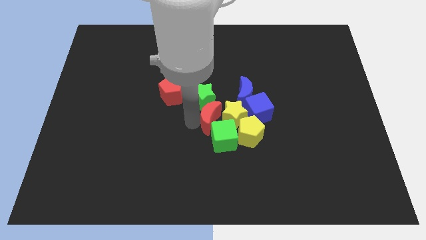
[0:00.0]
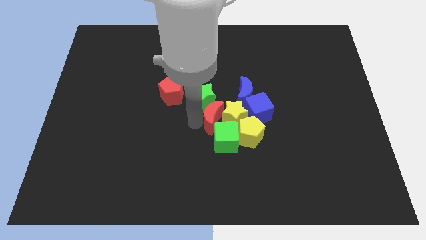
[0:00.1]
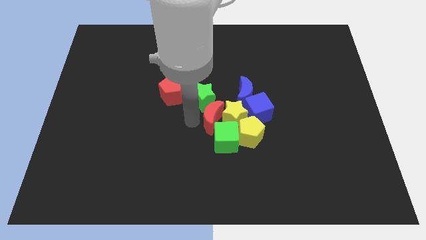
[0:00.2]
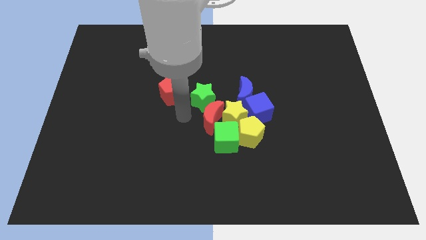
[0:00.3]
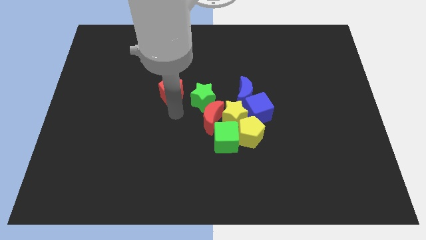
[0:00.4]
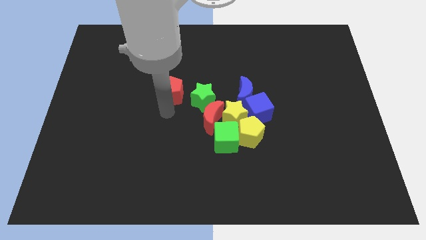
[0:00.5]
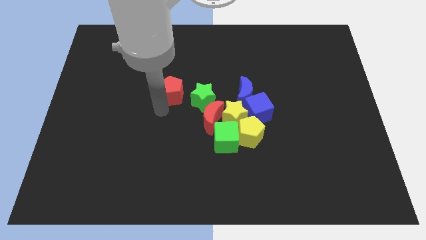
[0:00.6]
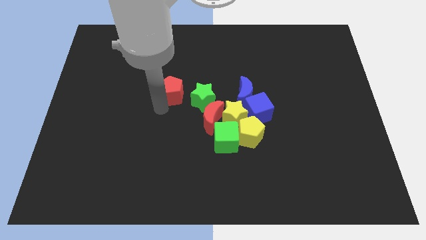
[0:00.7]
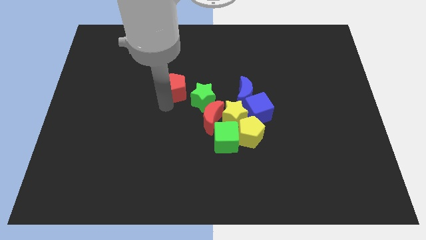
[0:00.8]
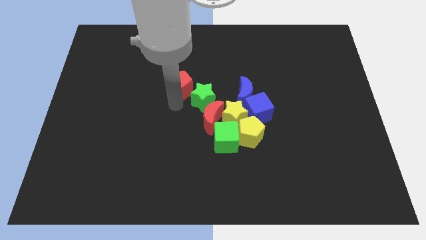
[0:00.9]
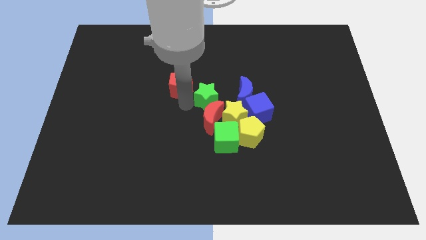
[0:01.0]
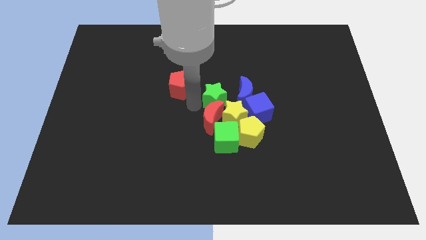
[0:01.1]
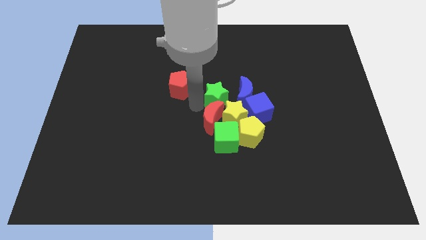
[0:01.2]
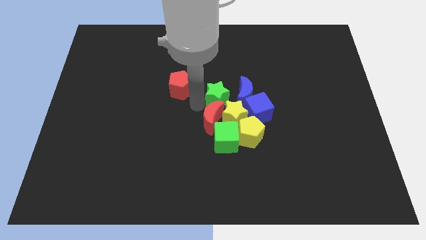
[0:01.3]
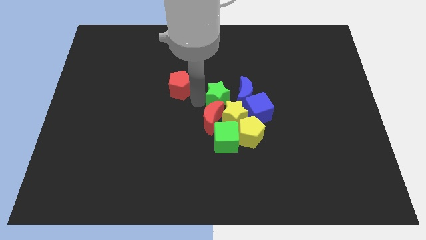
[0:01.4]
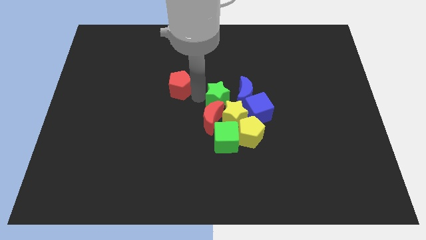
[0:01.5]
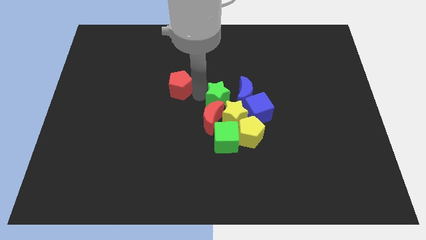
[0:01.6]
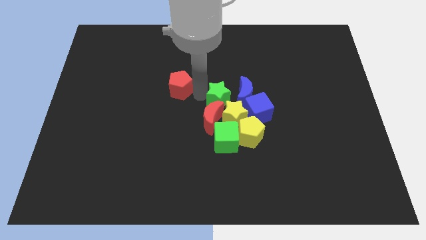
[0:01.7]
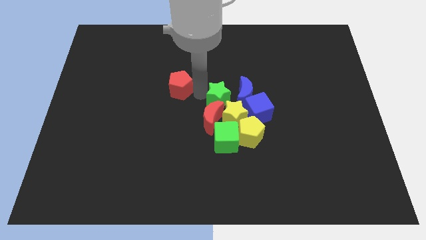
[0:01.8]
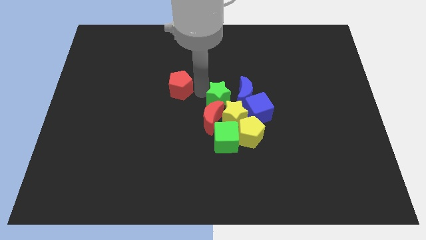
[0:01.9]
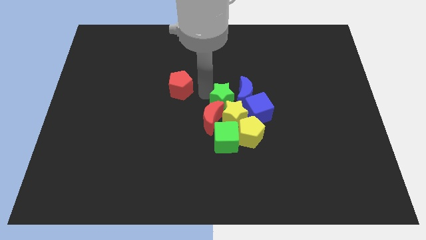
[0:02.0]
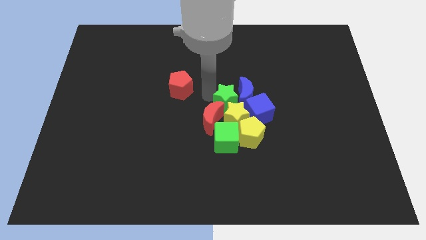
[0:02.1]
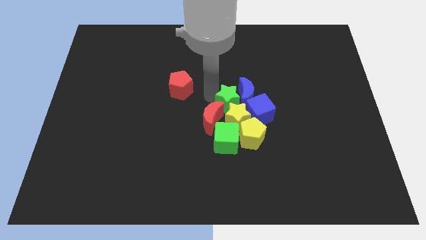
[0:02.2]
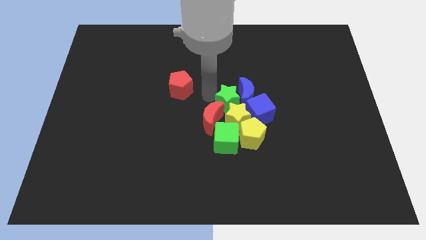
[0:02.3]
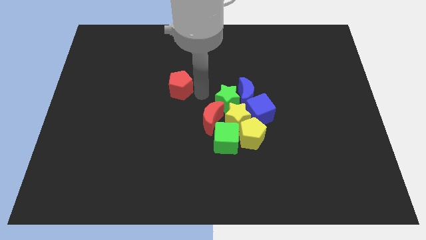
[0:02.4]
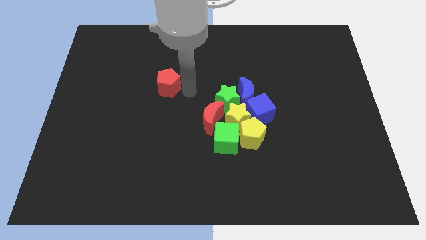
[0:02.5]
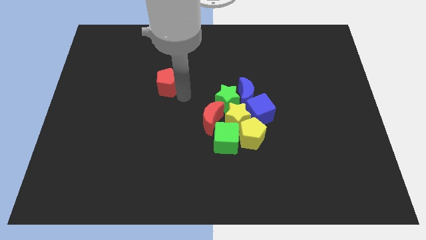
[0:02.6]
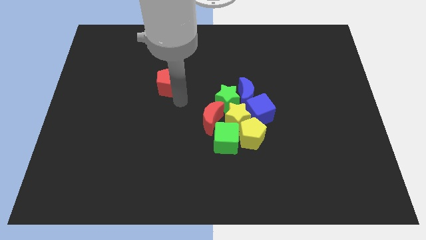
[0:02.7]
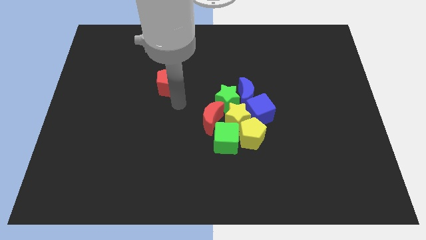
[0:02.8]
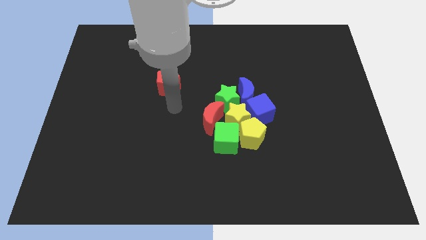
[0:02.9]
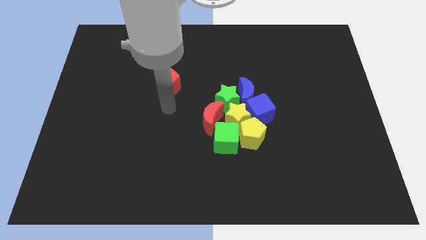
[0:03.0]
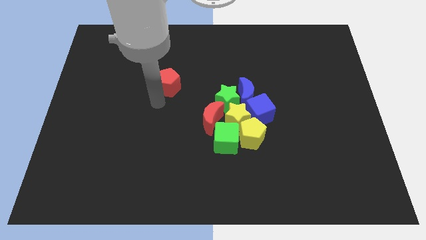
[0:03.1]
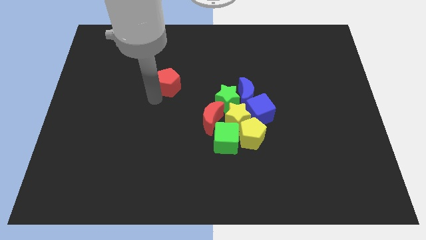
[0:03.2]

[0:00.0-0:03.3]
move the green star into the top side of the yellow star

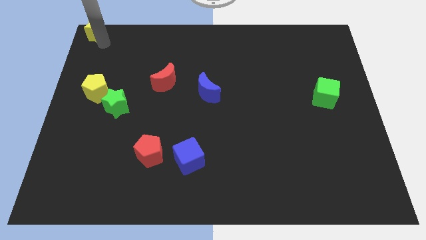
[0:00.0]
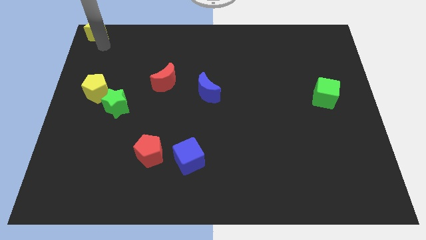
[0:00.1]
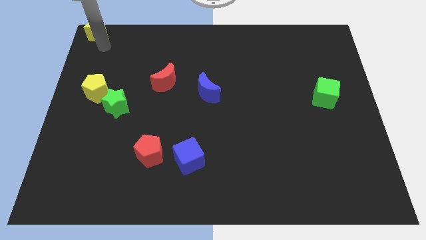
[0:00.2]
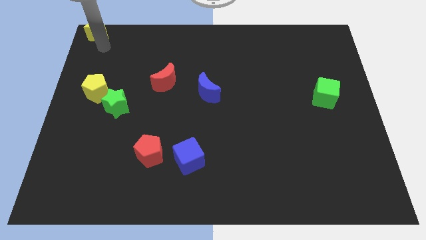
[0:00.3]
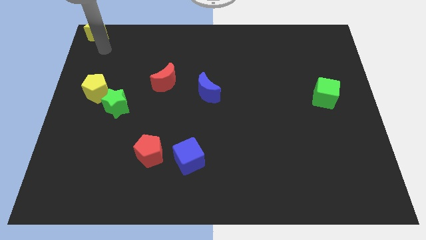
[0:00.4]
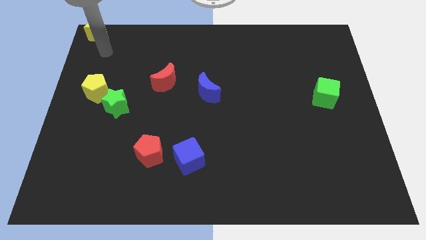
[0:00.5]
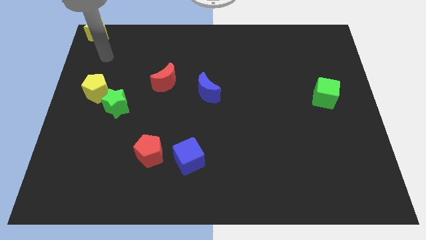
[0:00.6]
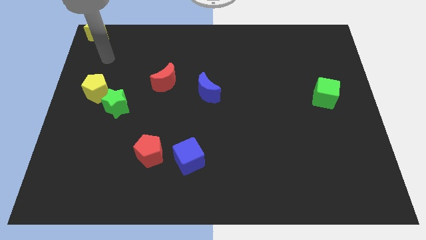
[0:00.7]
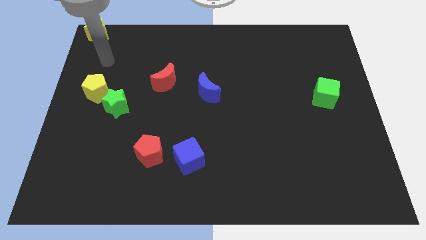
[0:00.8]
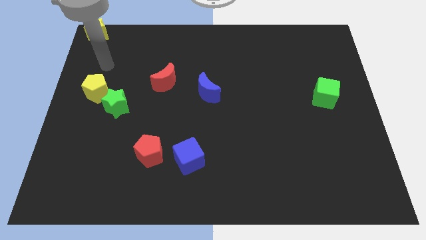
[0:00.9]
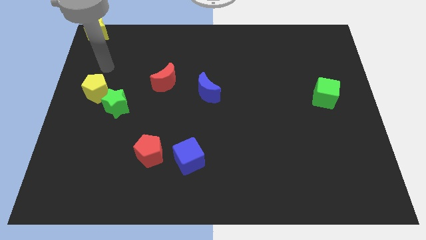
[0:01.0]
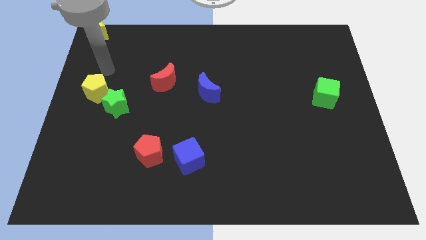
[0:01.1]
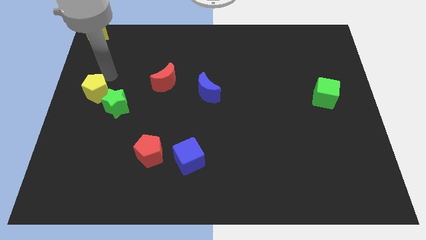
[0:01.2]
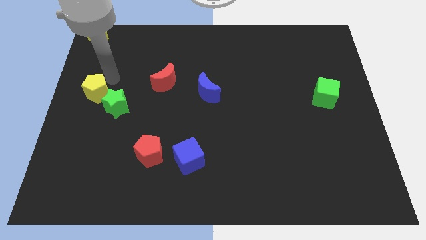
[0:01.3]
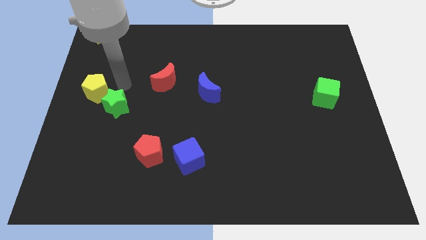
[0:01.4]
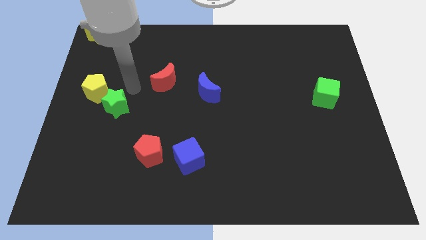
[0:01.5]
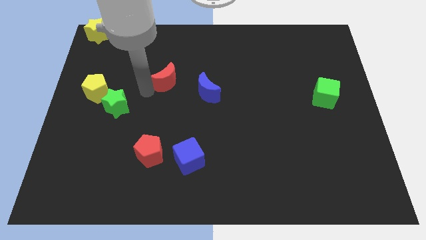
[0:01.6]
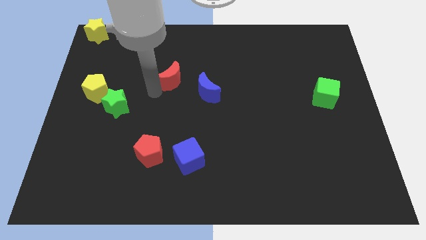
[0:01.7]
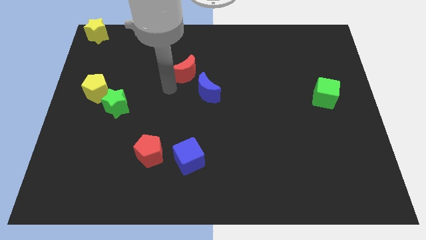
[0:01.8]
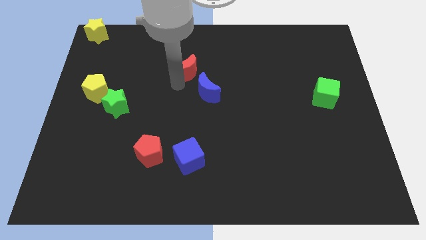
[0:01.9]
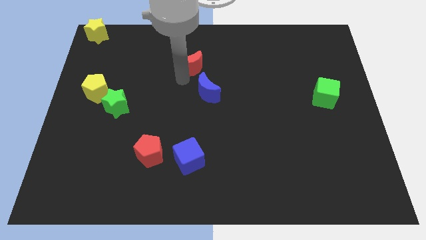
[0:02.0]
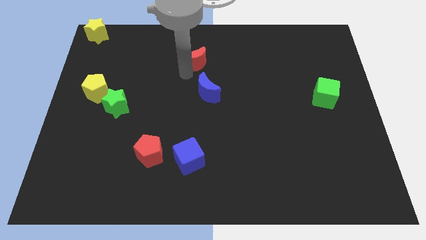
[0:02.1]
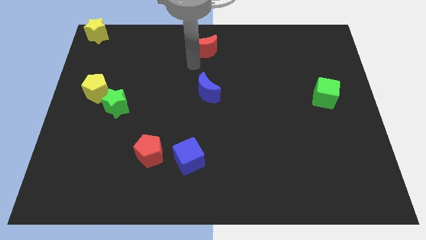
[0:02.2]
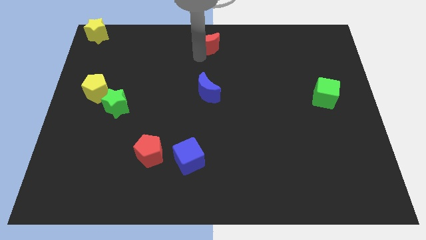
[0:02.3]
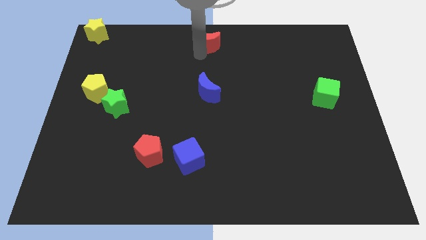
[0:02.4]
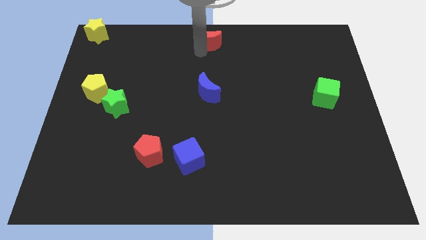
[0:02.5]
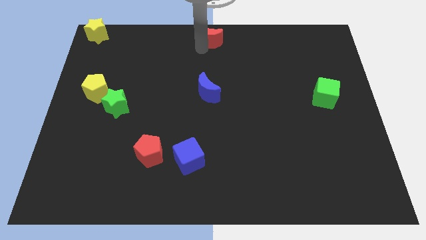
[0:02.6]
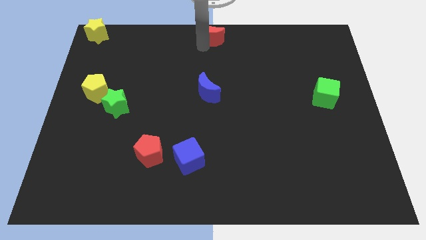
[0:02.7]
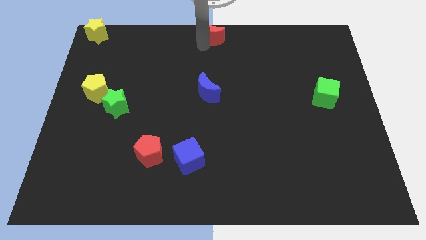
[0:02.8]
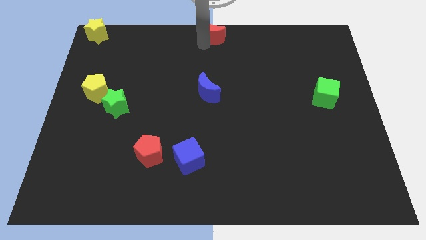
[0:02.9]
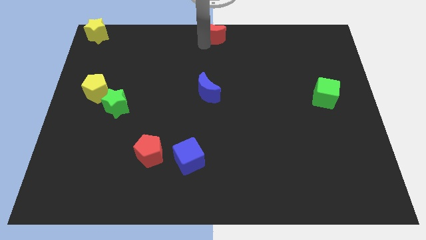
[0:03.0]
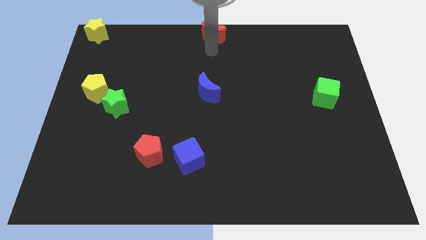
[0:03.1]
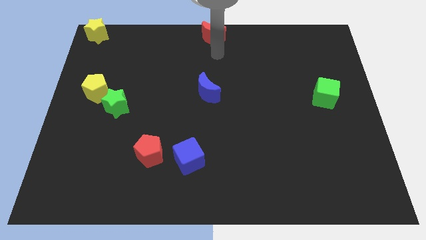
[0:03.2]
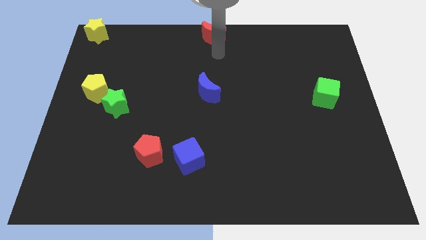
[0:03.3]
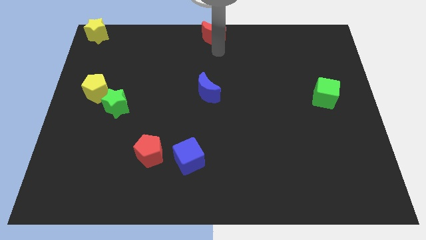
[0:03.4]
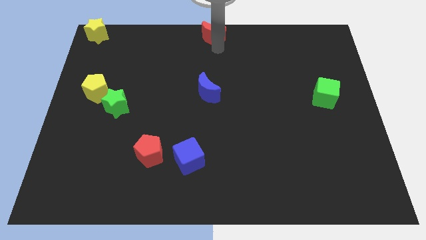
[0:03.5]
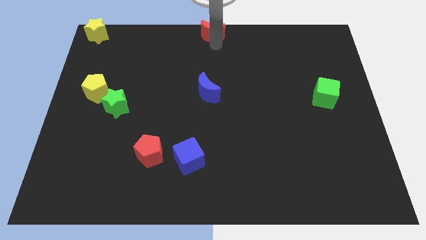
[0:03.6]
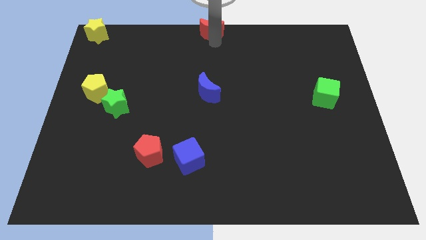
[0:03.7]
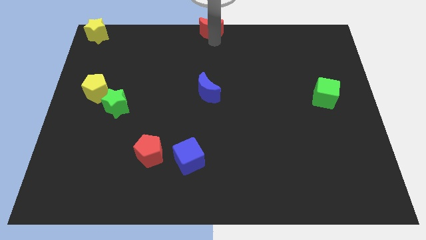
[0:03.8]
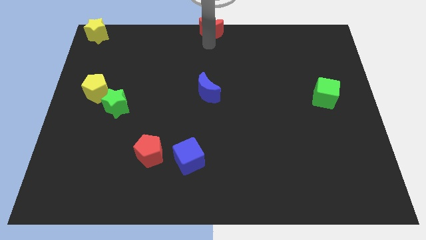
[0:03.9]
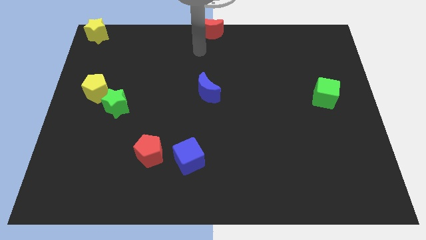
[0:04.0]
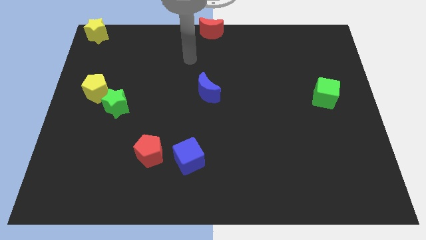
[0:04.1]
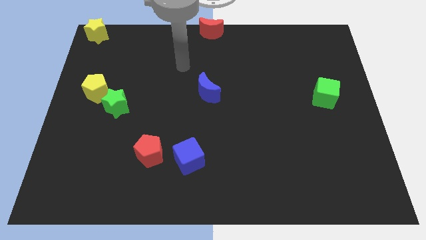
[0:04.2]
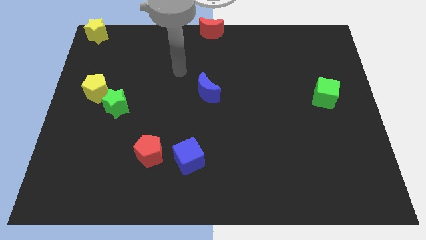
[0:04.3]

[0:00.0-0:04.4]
push the red crescent to the center top of the board

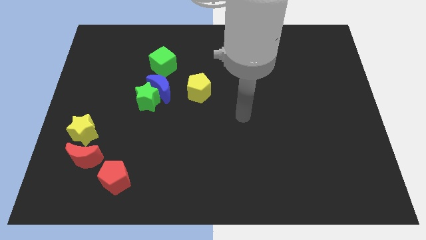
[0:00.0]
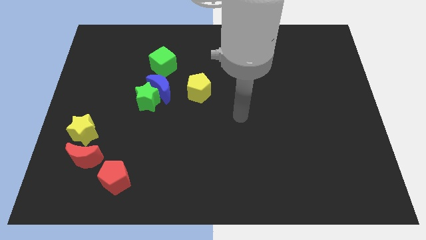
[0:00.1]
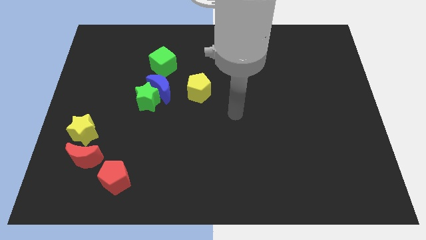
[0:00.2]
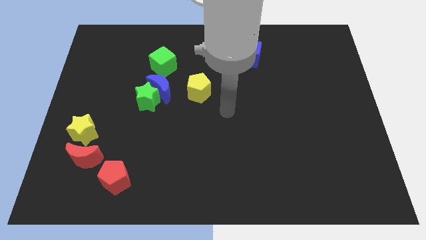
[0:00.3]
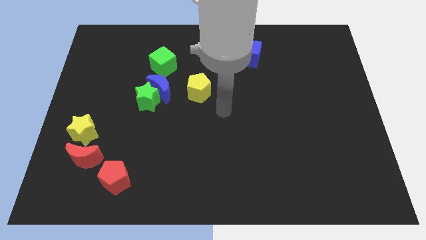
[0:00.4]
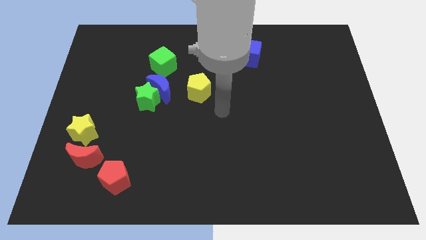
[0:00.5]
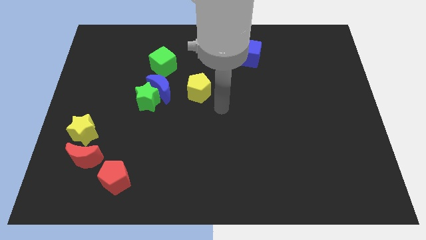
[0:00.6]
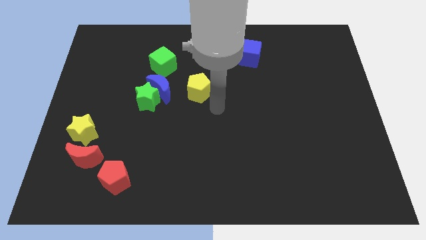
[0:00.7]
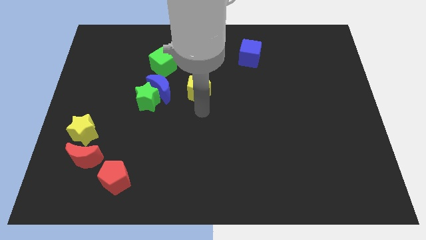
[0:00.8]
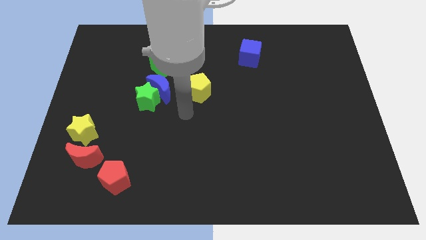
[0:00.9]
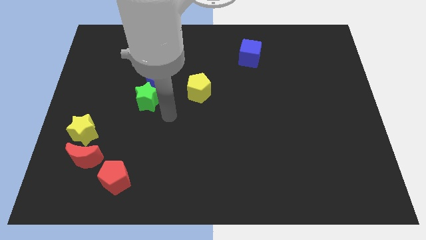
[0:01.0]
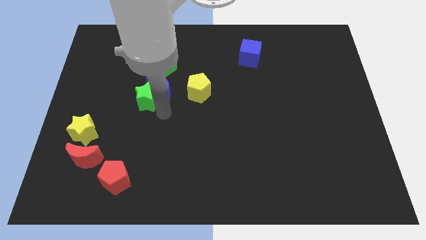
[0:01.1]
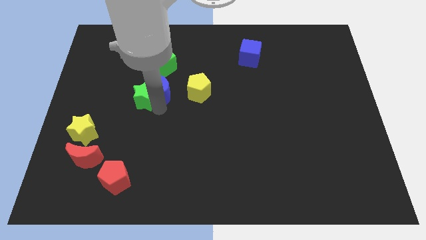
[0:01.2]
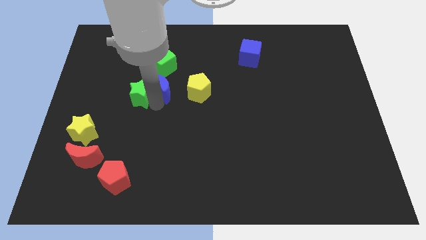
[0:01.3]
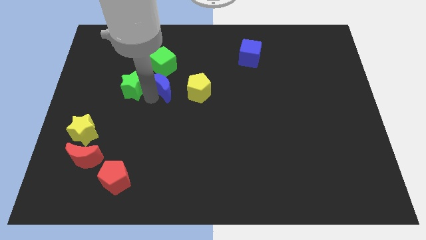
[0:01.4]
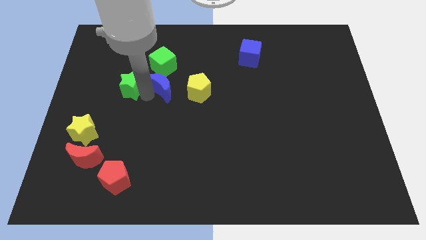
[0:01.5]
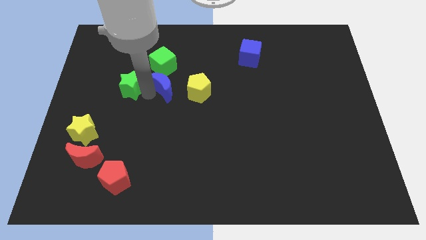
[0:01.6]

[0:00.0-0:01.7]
place green star to the left of blue moon
